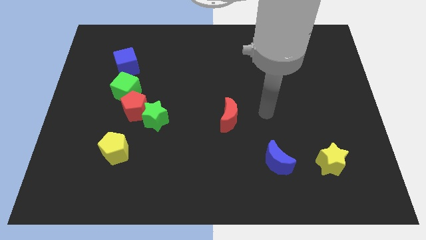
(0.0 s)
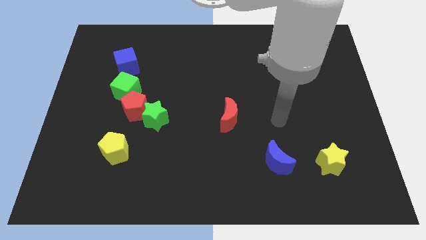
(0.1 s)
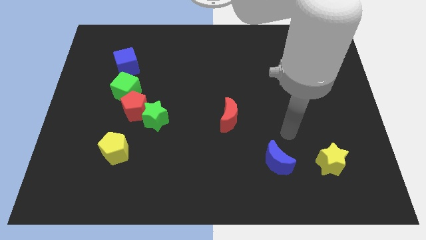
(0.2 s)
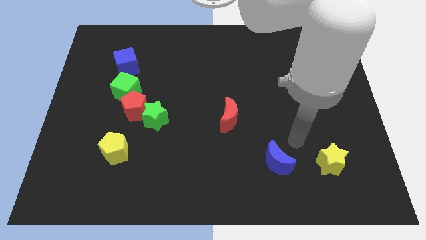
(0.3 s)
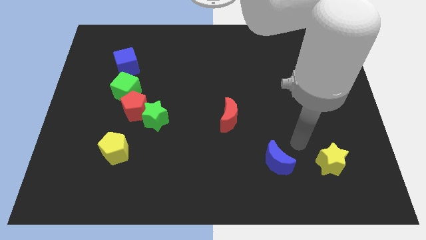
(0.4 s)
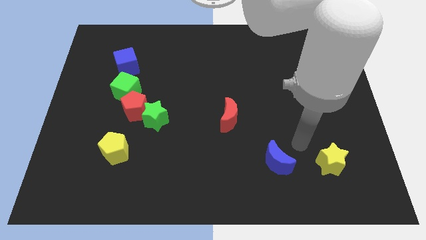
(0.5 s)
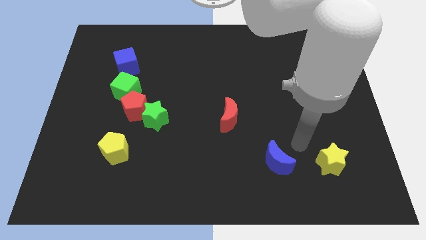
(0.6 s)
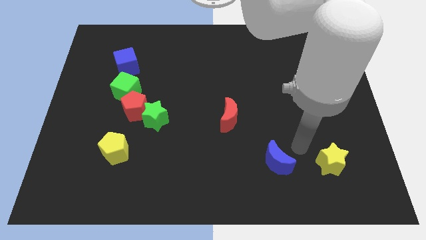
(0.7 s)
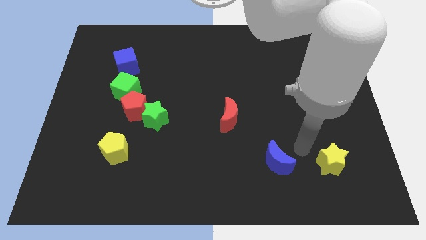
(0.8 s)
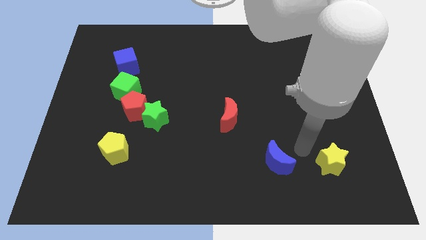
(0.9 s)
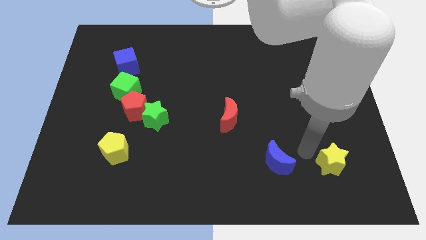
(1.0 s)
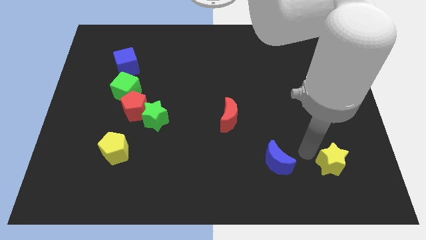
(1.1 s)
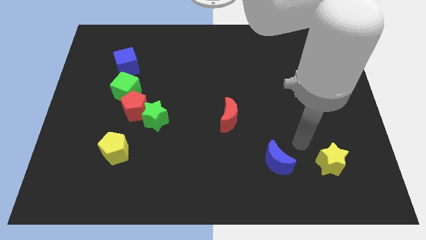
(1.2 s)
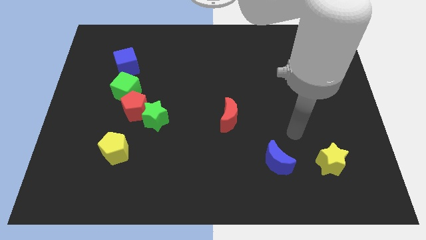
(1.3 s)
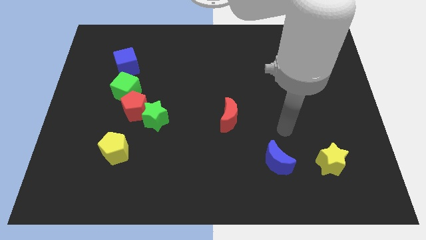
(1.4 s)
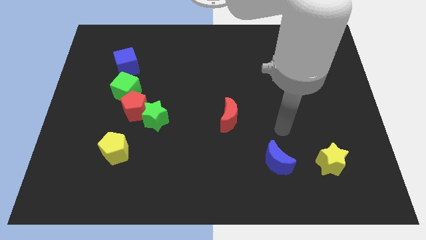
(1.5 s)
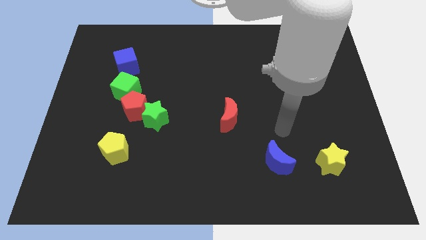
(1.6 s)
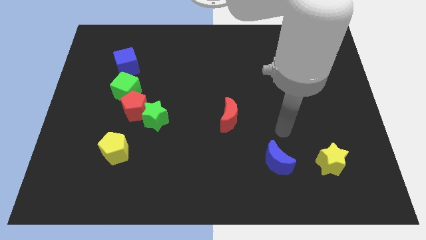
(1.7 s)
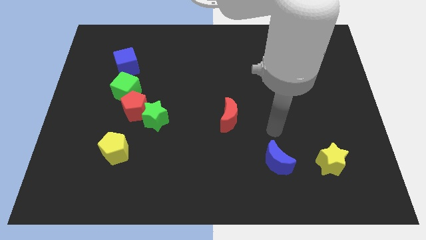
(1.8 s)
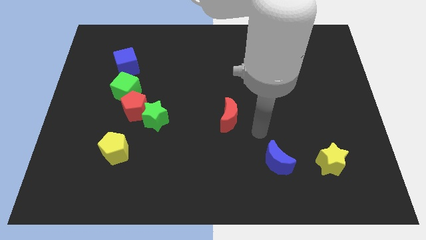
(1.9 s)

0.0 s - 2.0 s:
put your hand between the red moon and blue moon

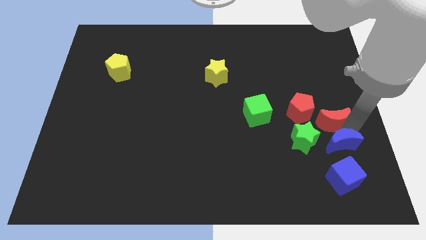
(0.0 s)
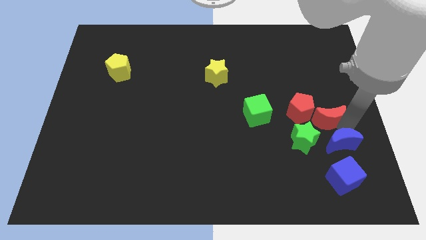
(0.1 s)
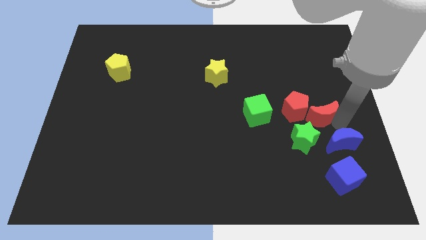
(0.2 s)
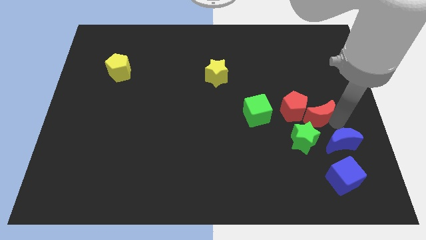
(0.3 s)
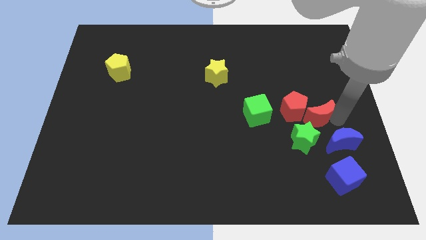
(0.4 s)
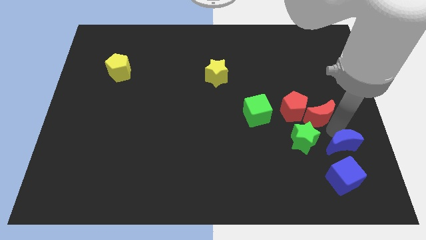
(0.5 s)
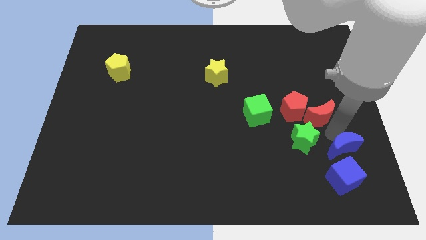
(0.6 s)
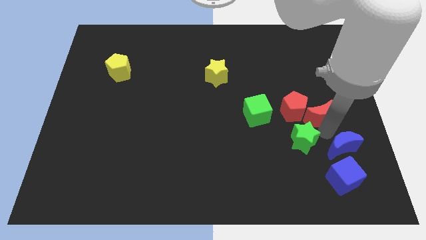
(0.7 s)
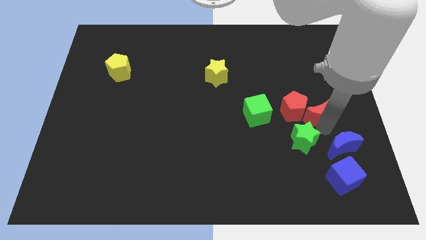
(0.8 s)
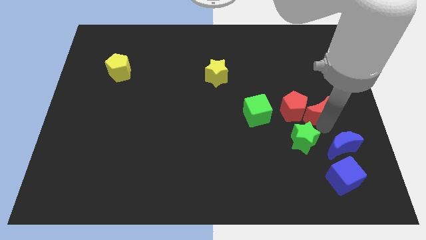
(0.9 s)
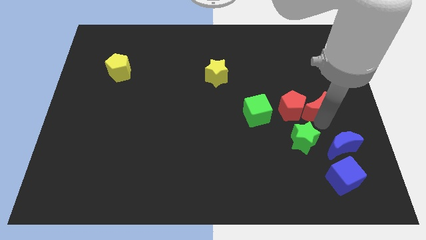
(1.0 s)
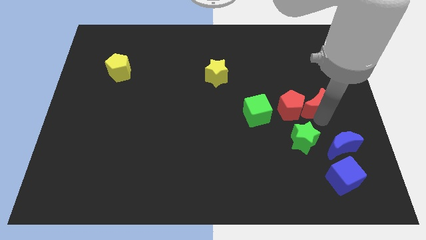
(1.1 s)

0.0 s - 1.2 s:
separate red moon from blue moon

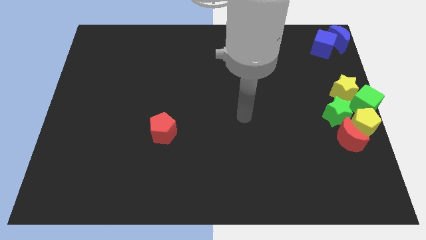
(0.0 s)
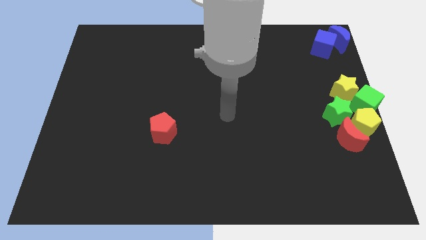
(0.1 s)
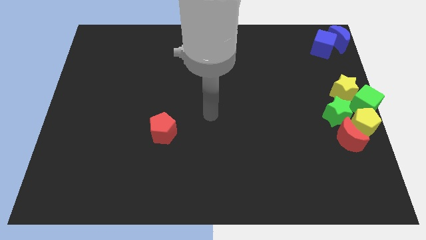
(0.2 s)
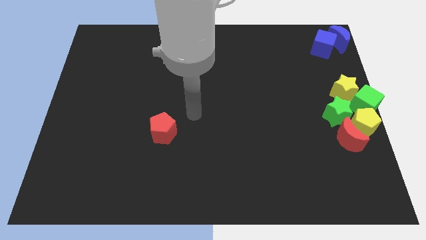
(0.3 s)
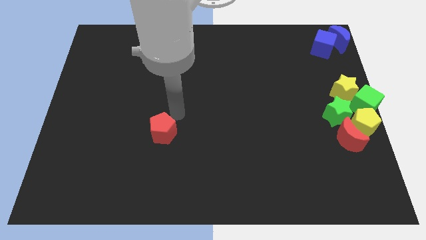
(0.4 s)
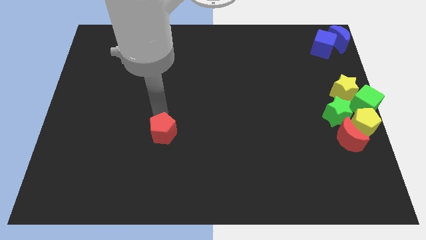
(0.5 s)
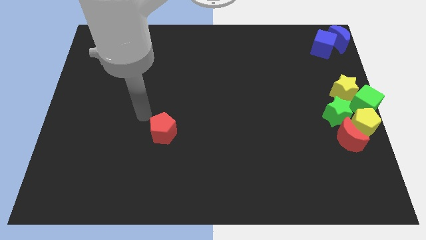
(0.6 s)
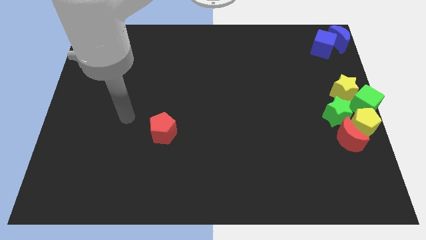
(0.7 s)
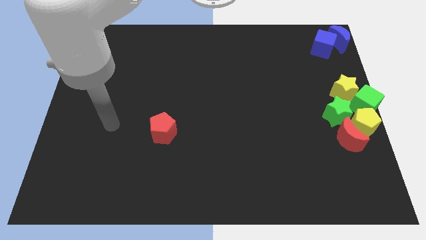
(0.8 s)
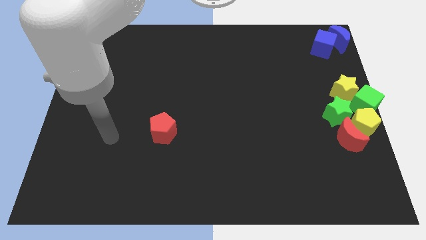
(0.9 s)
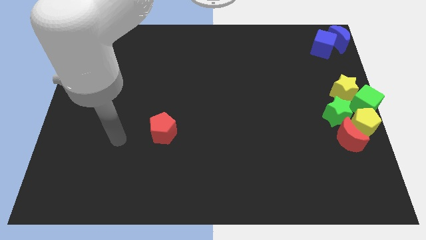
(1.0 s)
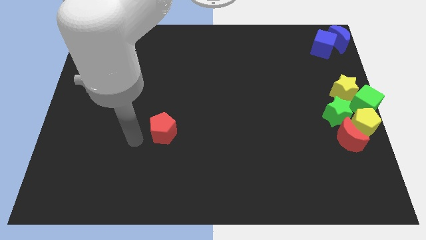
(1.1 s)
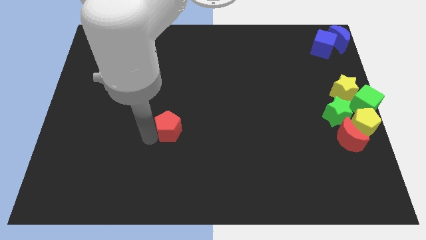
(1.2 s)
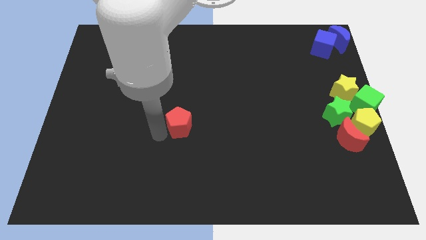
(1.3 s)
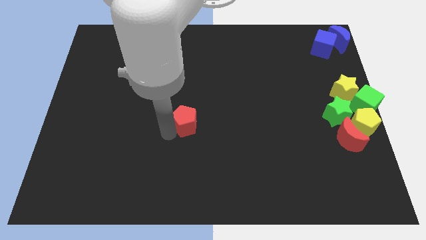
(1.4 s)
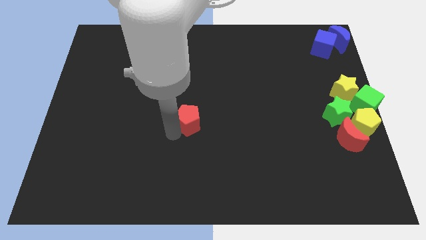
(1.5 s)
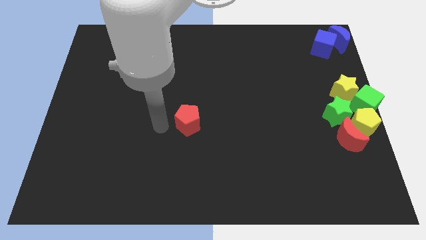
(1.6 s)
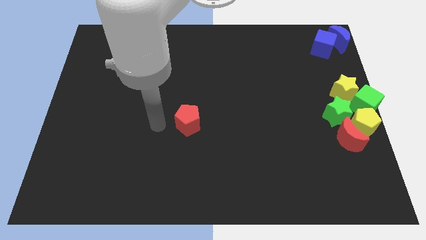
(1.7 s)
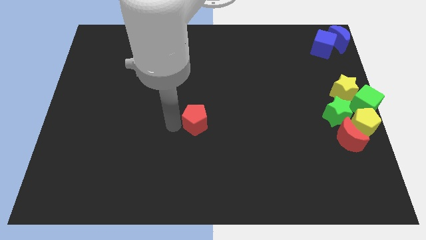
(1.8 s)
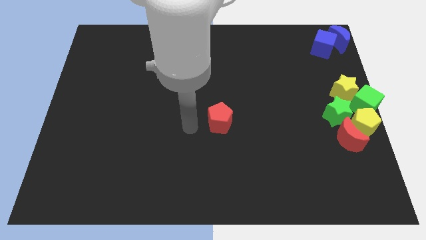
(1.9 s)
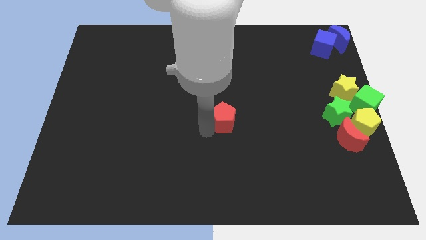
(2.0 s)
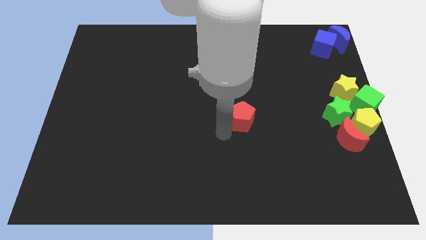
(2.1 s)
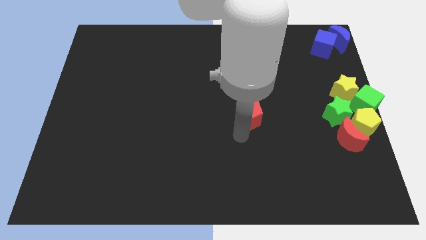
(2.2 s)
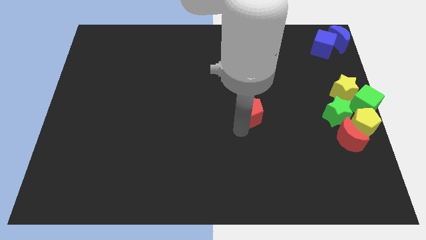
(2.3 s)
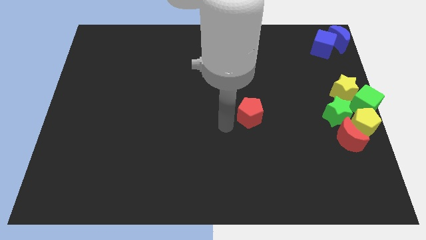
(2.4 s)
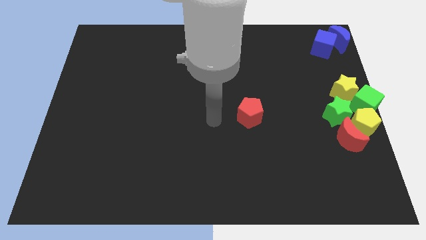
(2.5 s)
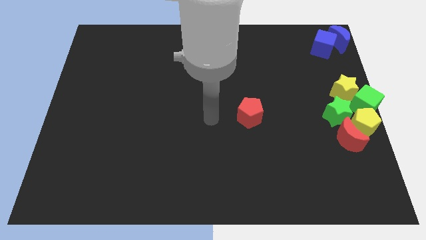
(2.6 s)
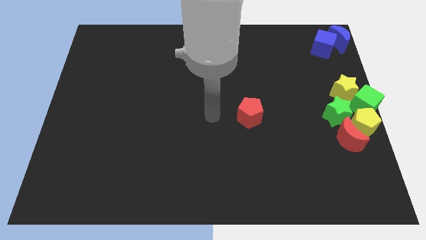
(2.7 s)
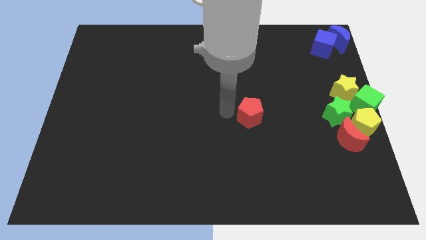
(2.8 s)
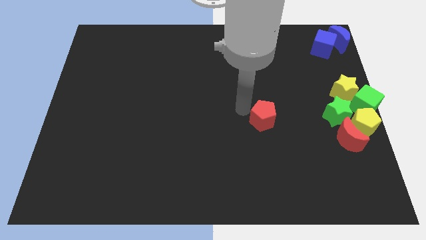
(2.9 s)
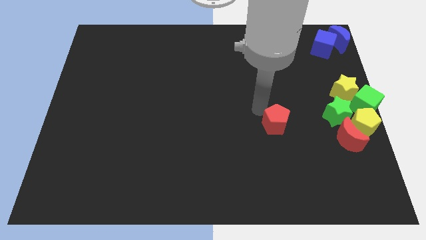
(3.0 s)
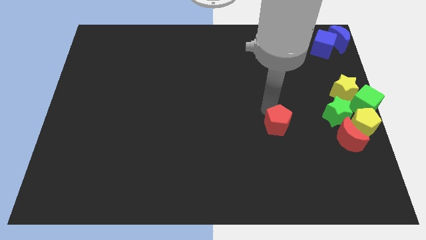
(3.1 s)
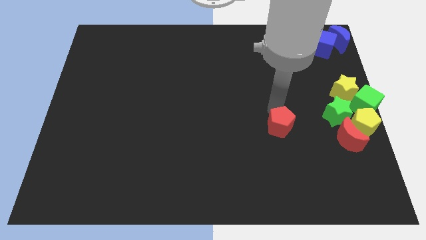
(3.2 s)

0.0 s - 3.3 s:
drag the red pentagon towards the group of blocks

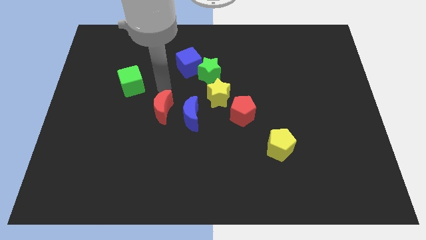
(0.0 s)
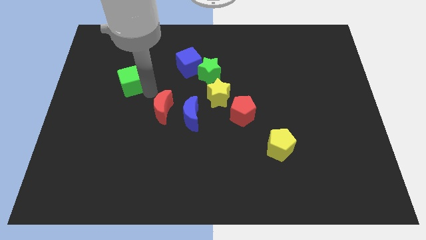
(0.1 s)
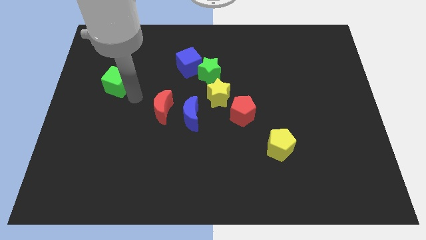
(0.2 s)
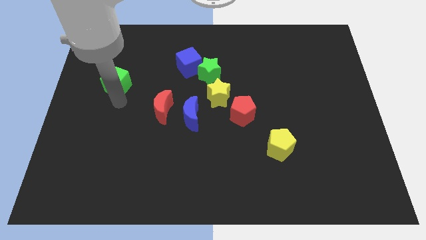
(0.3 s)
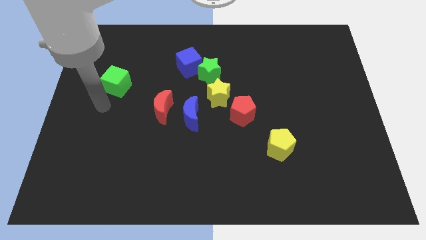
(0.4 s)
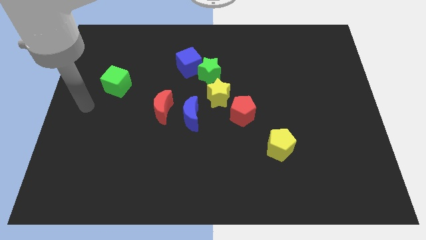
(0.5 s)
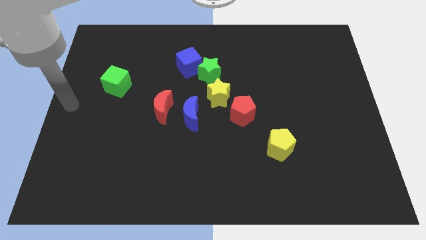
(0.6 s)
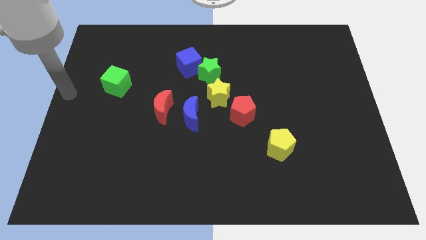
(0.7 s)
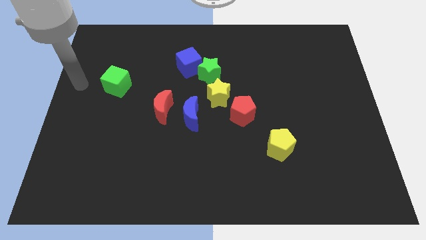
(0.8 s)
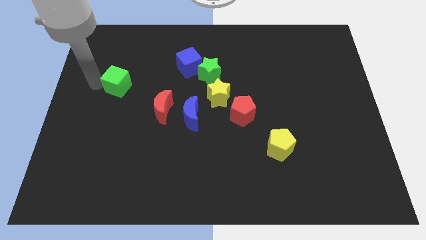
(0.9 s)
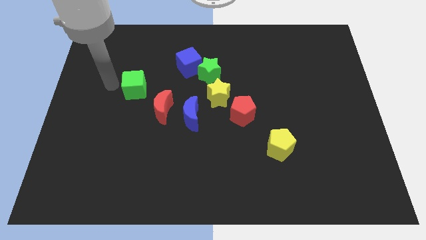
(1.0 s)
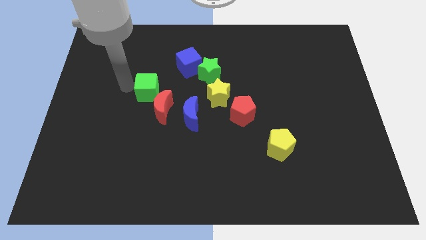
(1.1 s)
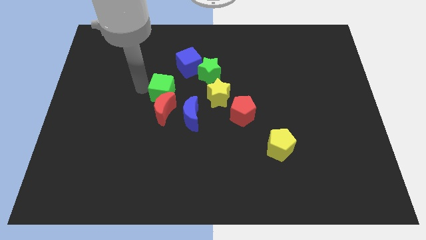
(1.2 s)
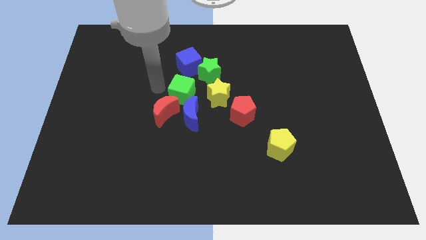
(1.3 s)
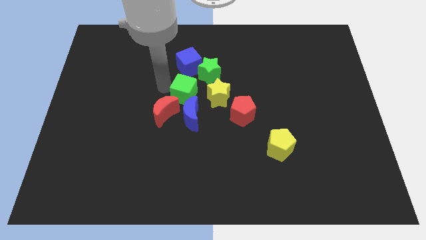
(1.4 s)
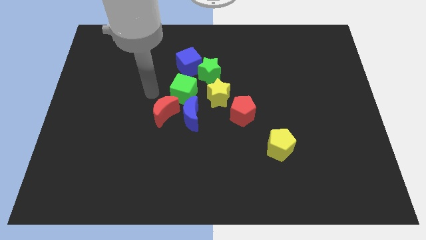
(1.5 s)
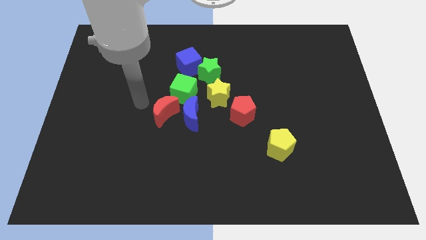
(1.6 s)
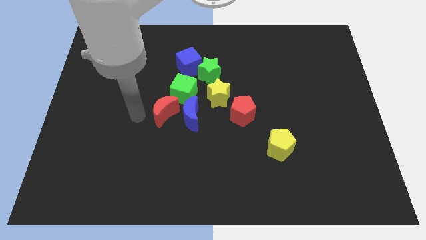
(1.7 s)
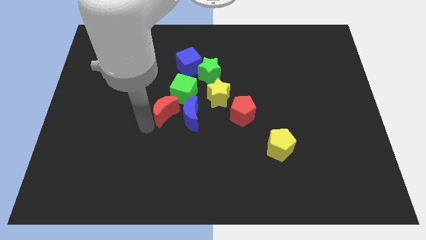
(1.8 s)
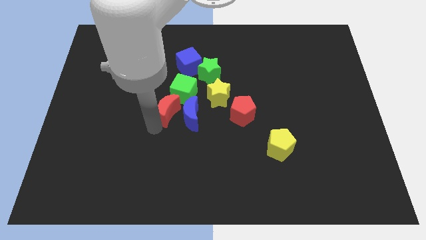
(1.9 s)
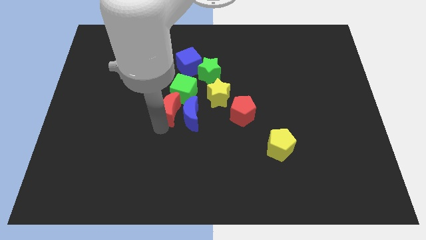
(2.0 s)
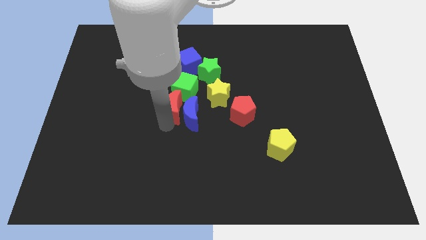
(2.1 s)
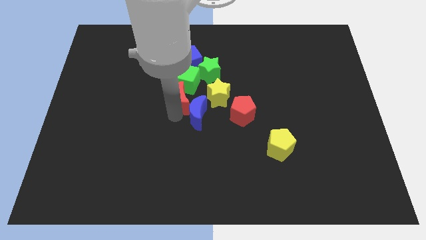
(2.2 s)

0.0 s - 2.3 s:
move the green cube and red moon into the group of blocks at the center

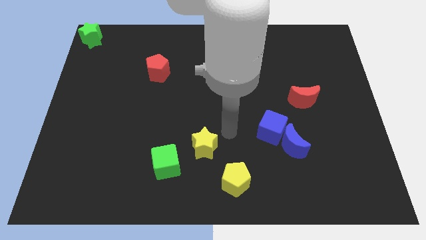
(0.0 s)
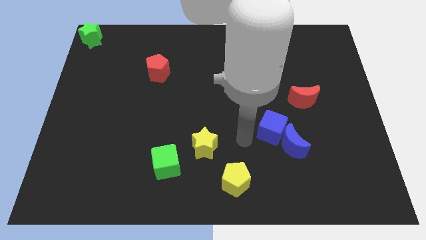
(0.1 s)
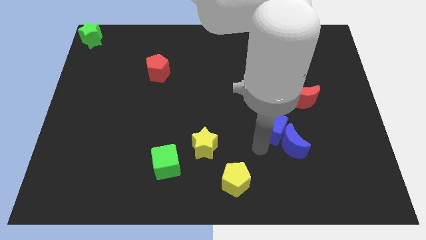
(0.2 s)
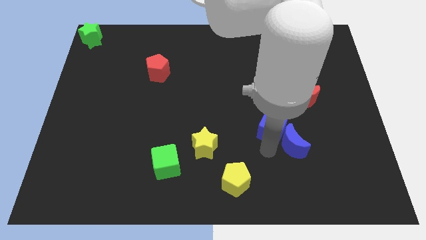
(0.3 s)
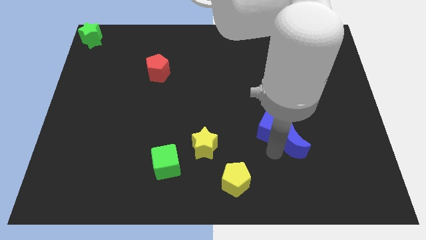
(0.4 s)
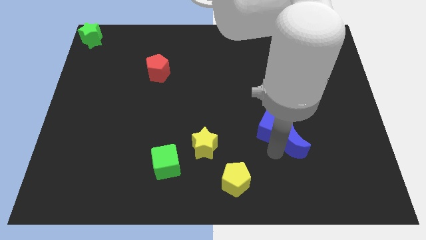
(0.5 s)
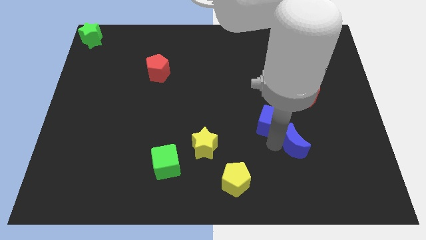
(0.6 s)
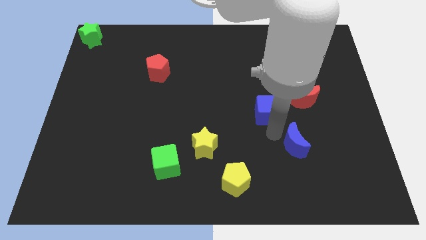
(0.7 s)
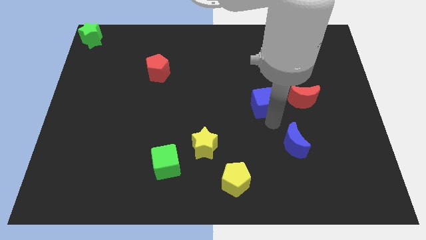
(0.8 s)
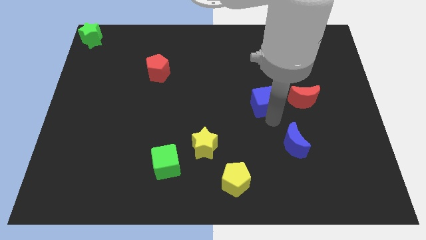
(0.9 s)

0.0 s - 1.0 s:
separate the blue cube from blue crescent
